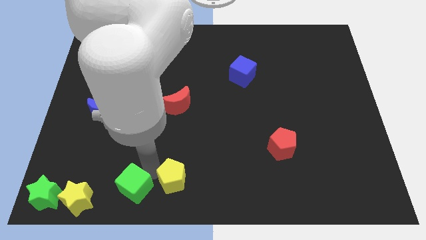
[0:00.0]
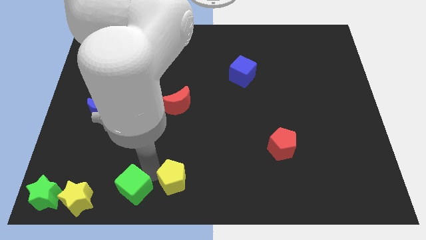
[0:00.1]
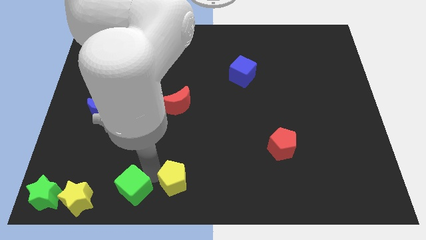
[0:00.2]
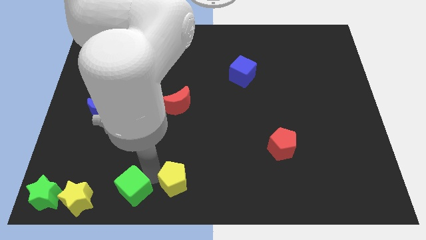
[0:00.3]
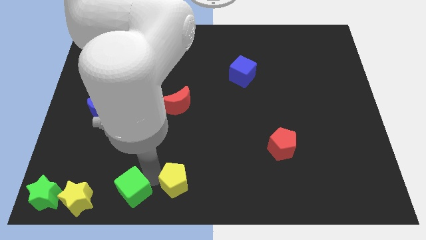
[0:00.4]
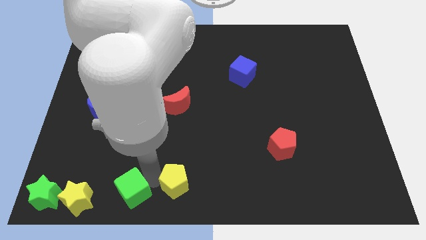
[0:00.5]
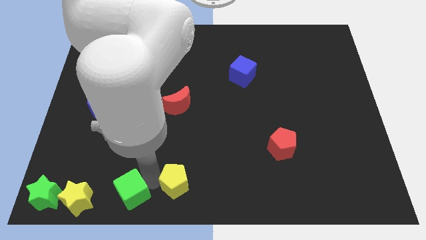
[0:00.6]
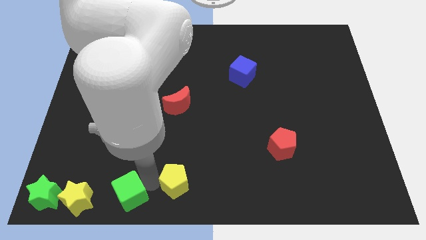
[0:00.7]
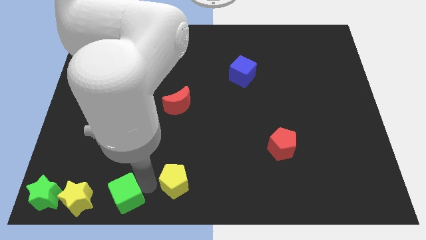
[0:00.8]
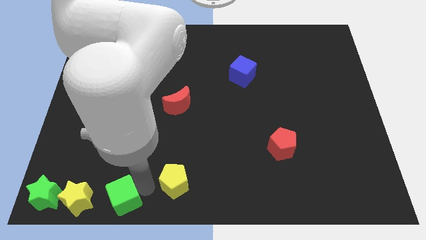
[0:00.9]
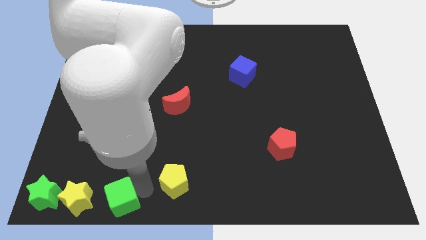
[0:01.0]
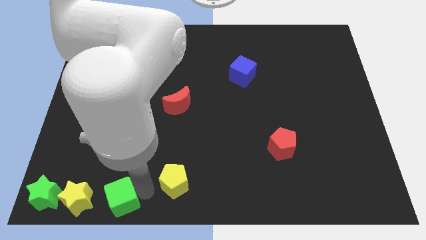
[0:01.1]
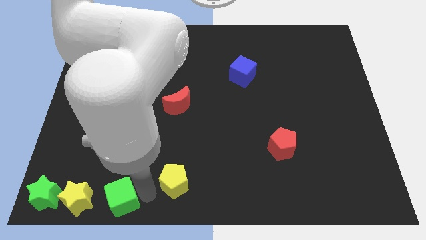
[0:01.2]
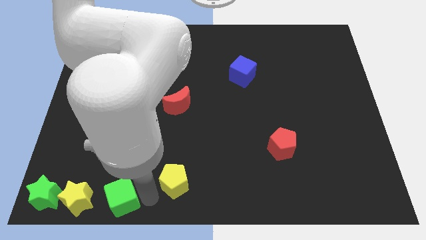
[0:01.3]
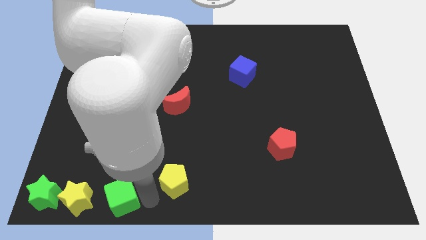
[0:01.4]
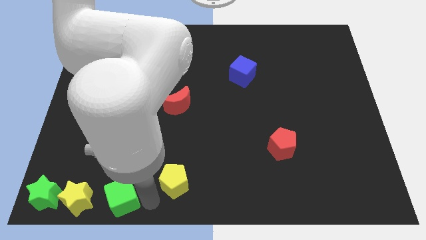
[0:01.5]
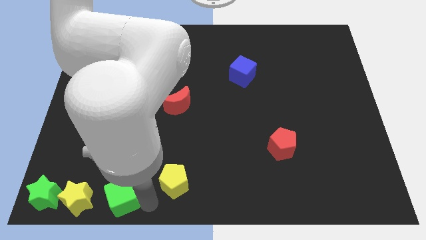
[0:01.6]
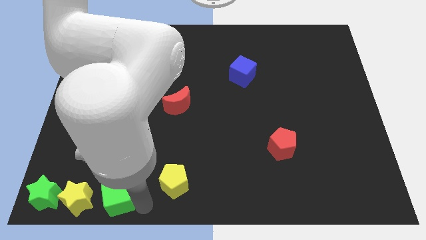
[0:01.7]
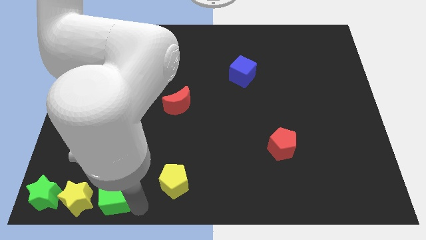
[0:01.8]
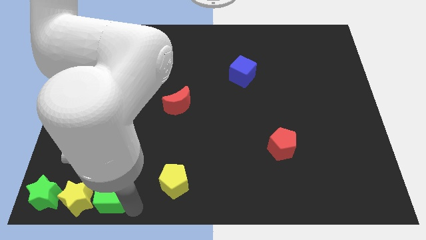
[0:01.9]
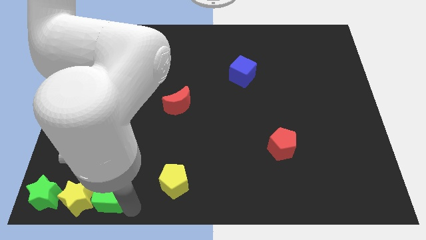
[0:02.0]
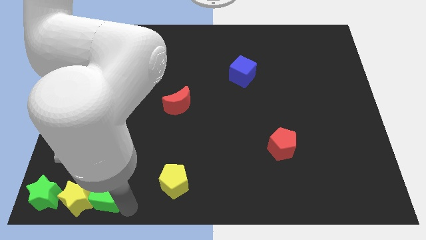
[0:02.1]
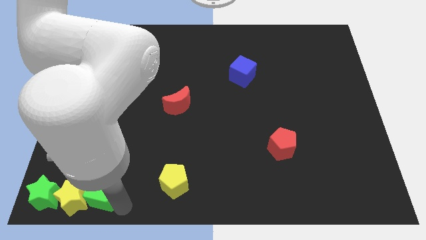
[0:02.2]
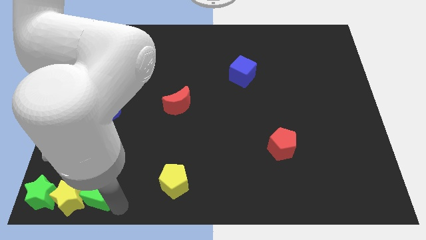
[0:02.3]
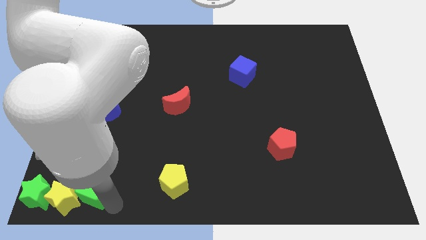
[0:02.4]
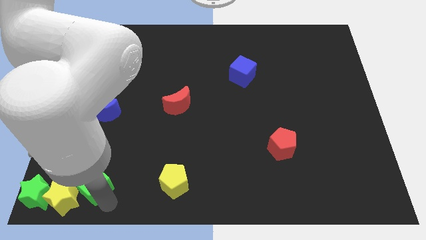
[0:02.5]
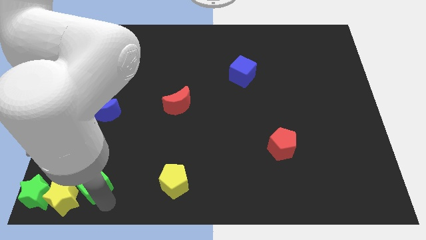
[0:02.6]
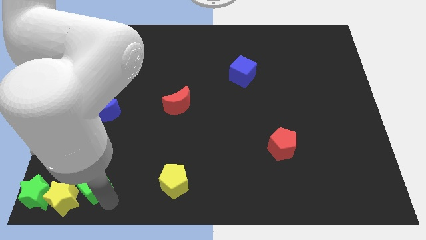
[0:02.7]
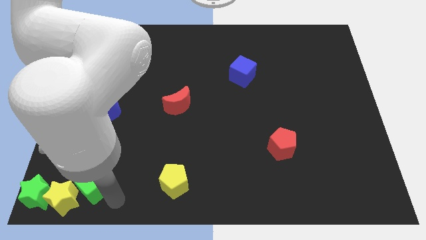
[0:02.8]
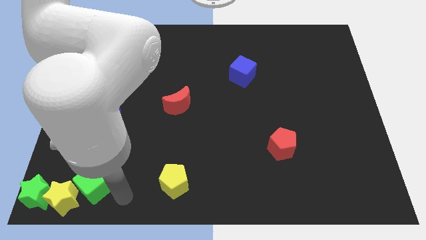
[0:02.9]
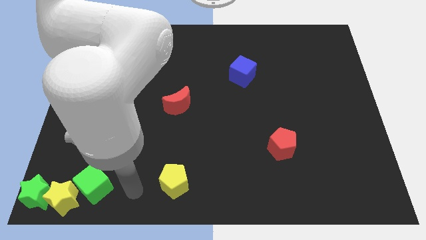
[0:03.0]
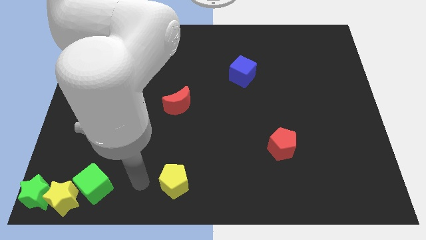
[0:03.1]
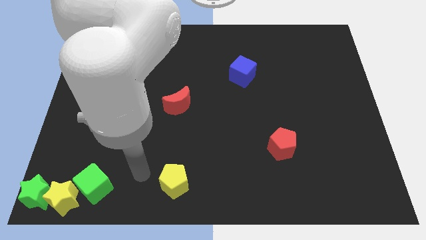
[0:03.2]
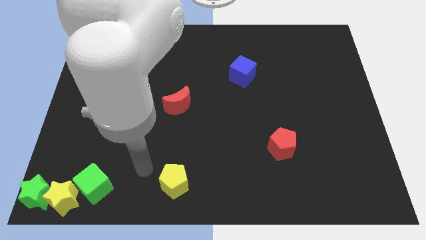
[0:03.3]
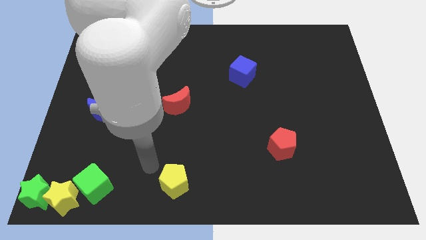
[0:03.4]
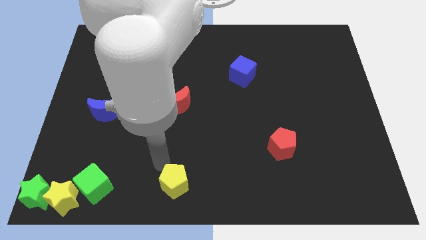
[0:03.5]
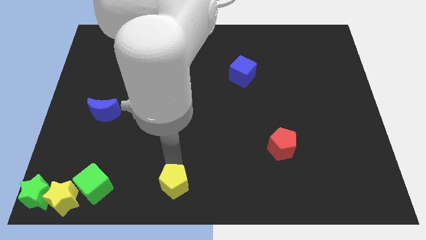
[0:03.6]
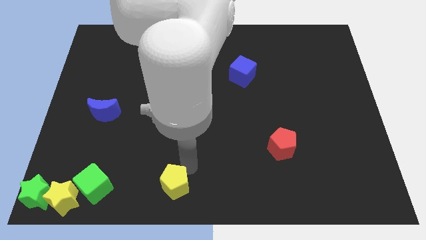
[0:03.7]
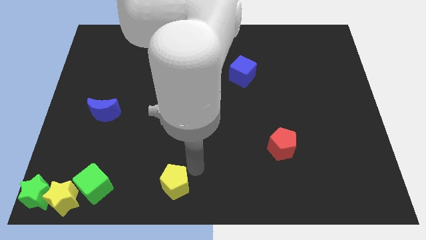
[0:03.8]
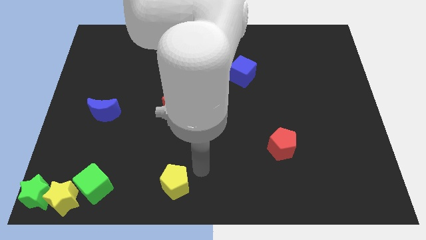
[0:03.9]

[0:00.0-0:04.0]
push the green star yellow star with the green cube slightly towards the bottom left of the board

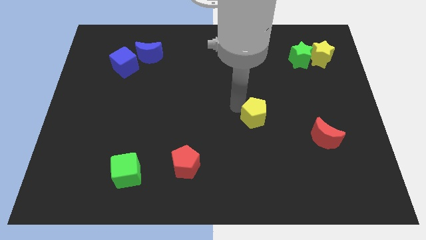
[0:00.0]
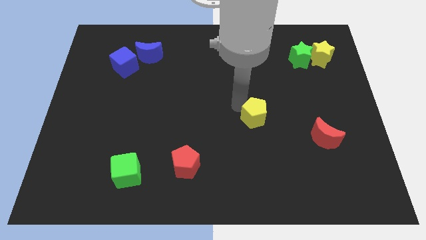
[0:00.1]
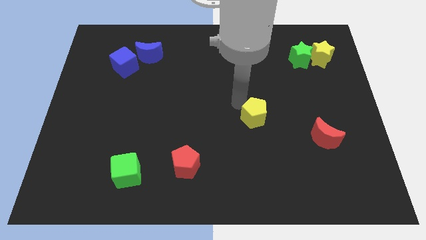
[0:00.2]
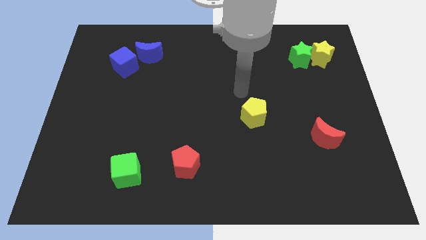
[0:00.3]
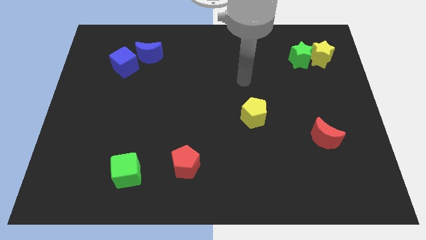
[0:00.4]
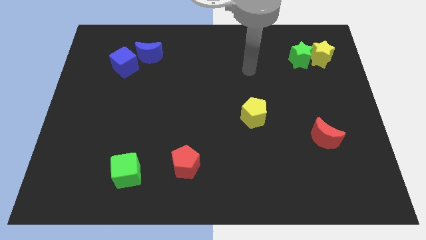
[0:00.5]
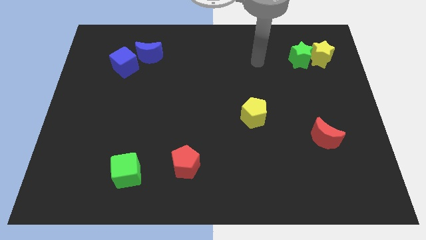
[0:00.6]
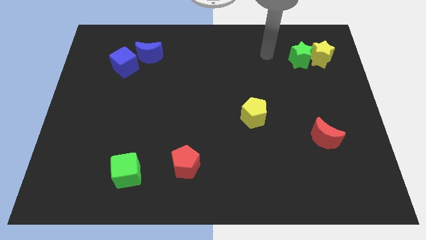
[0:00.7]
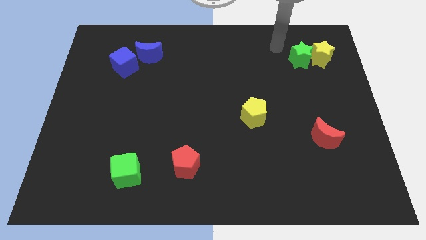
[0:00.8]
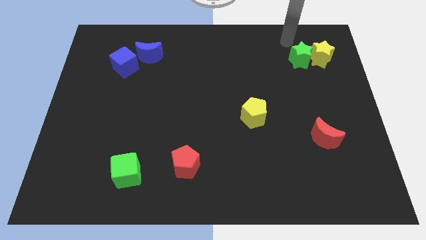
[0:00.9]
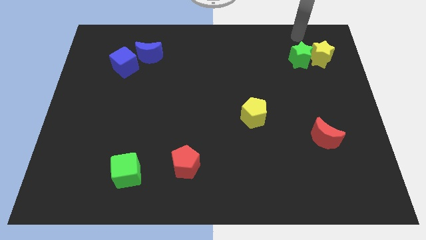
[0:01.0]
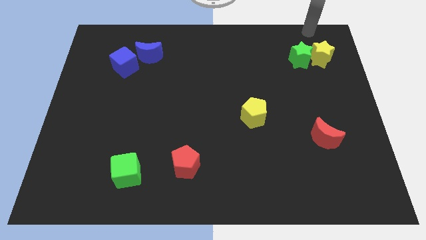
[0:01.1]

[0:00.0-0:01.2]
move arm away from yellow pentagon

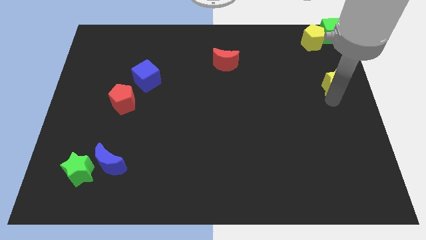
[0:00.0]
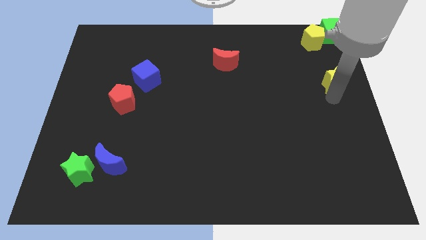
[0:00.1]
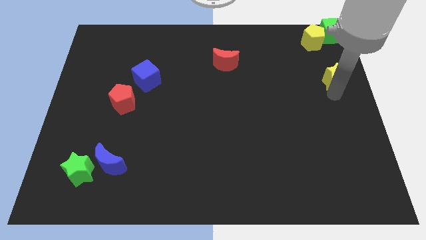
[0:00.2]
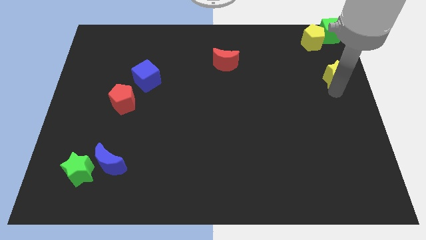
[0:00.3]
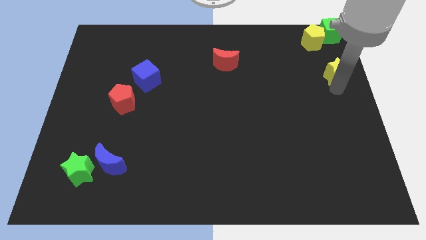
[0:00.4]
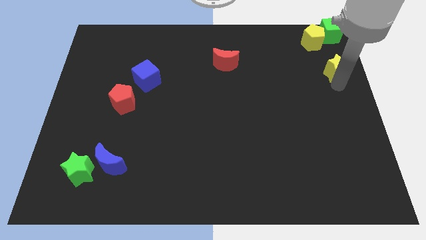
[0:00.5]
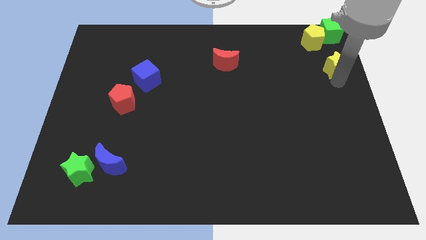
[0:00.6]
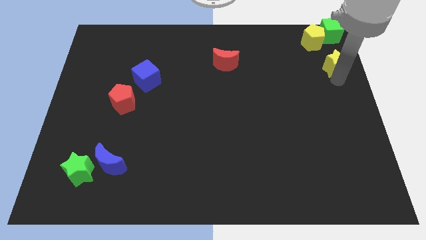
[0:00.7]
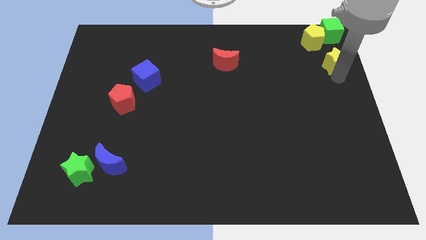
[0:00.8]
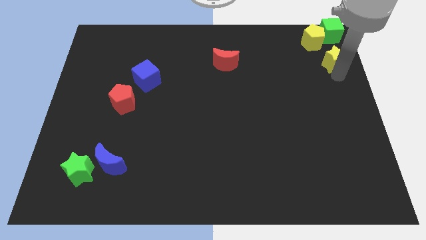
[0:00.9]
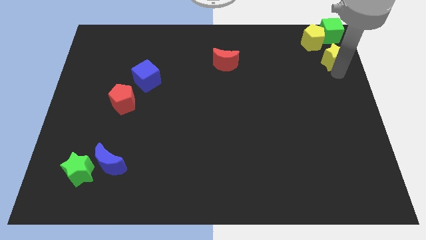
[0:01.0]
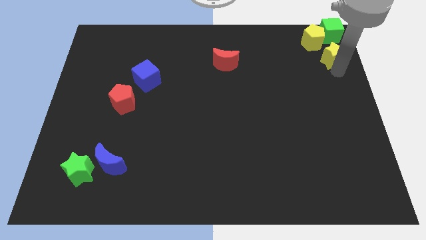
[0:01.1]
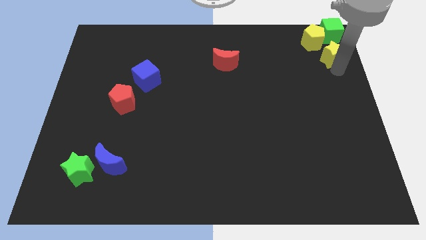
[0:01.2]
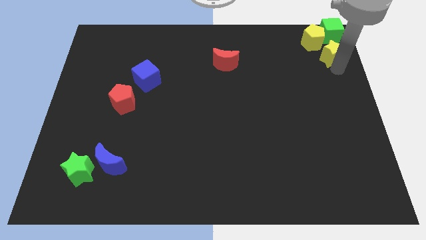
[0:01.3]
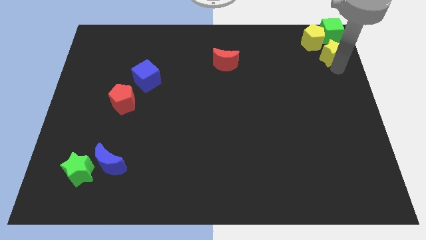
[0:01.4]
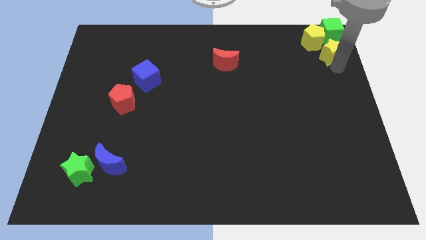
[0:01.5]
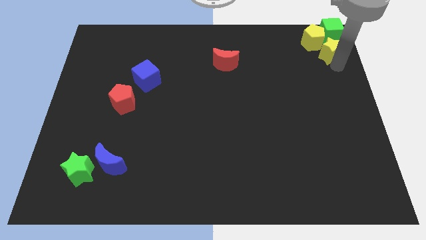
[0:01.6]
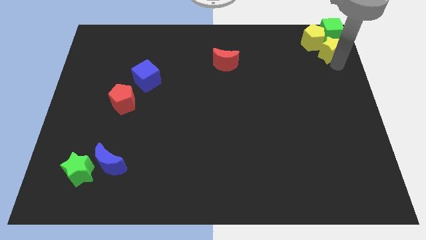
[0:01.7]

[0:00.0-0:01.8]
push the yellow star to the bottom of the green cube

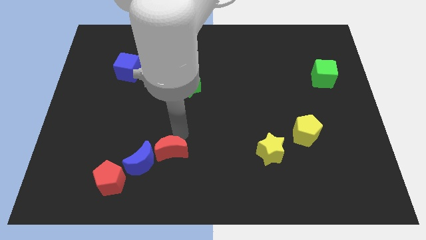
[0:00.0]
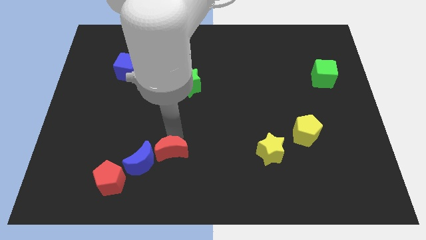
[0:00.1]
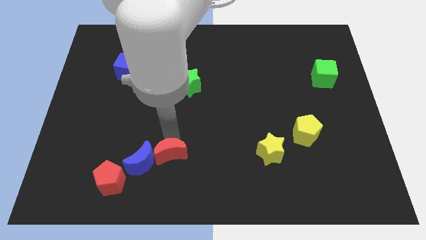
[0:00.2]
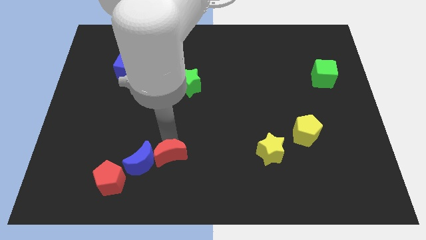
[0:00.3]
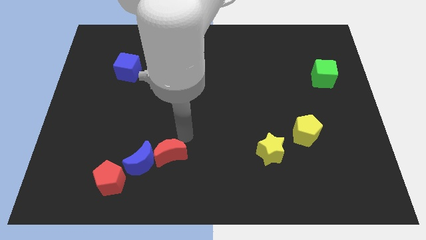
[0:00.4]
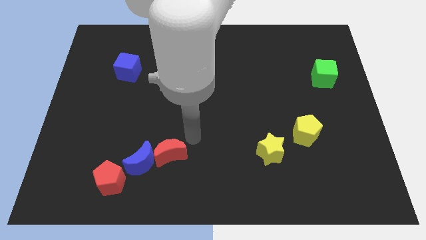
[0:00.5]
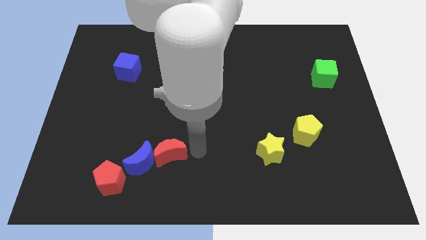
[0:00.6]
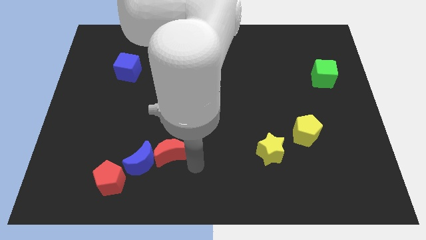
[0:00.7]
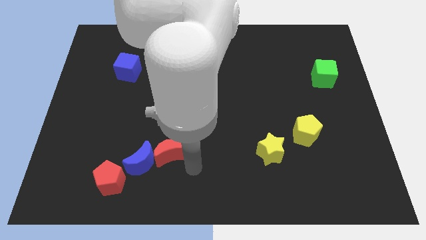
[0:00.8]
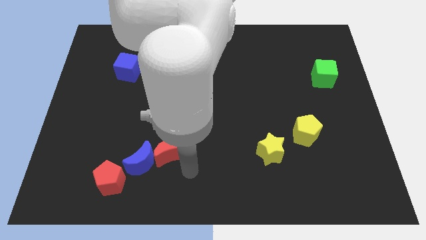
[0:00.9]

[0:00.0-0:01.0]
place the arm below the red crescent

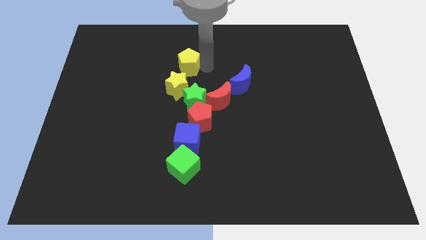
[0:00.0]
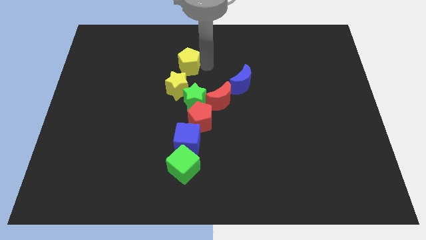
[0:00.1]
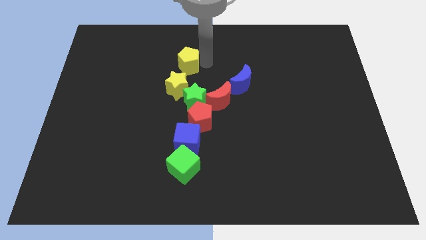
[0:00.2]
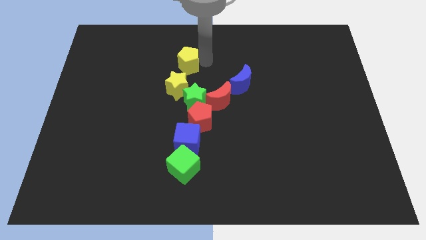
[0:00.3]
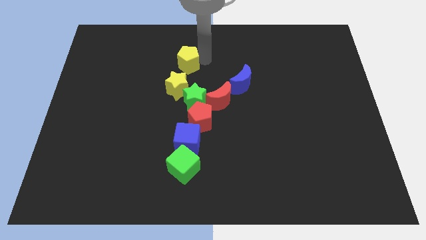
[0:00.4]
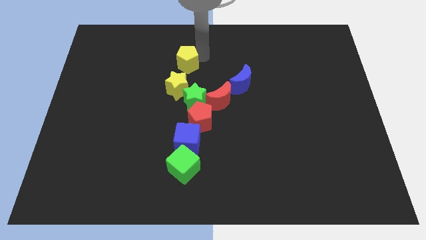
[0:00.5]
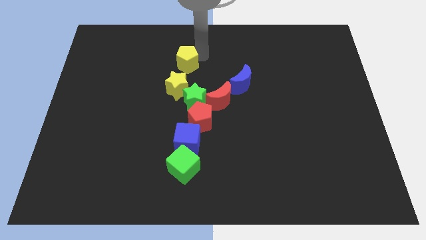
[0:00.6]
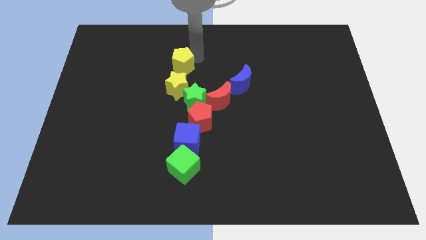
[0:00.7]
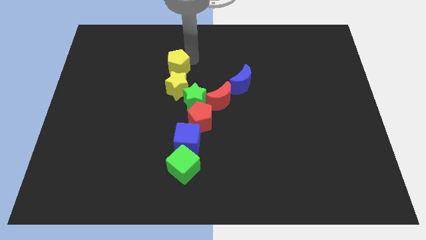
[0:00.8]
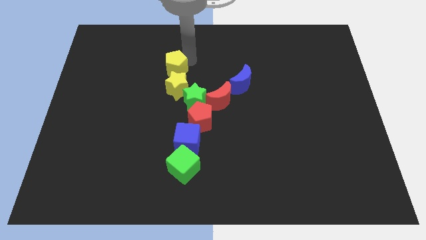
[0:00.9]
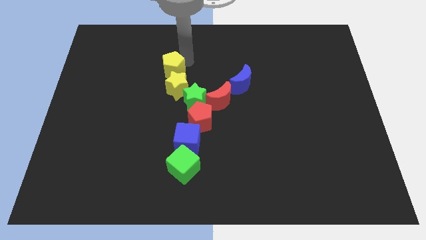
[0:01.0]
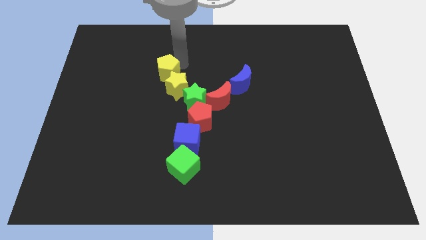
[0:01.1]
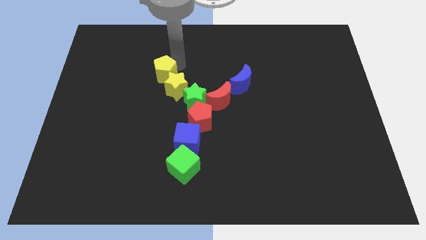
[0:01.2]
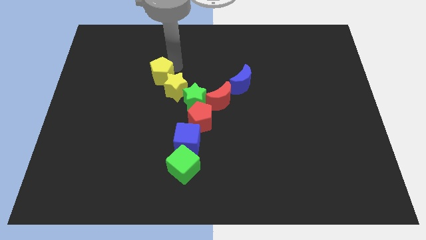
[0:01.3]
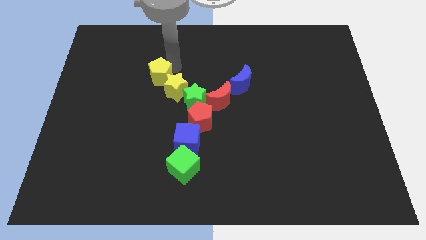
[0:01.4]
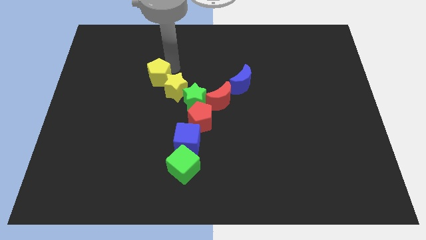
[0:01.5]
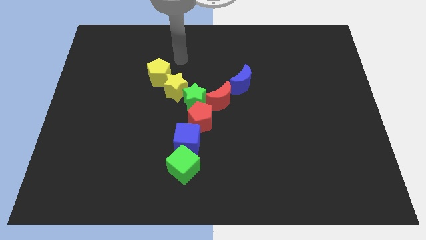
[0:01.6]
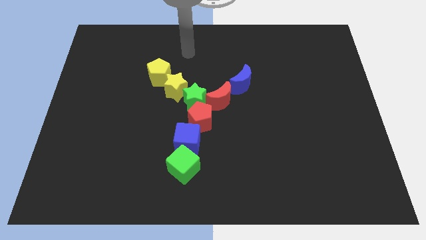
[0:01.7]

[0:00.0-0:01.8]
place the yellow pentagon left to the yellow star
